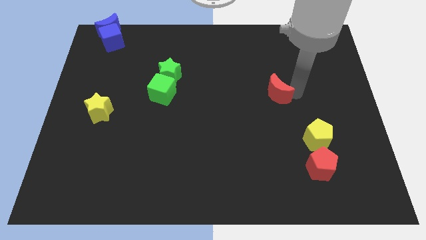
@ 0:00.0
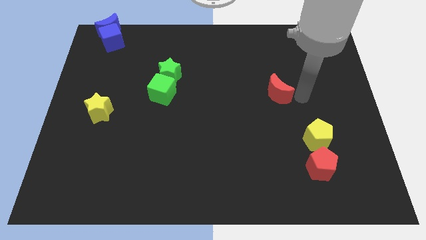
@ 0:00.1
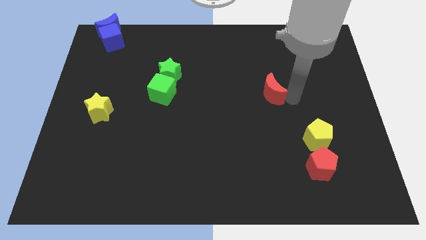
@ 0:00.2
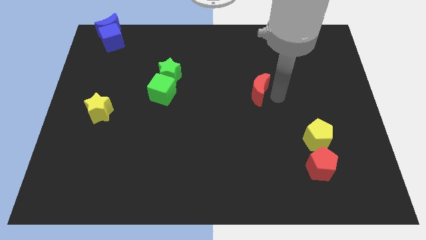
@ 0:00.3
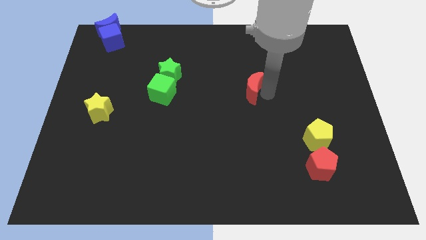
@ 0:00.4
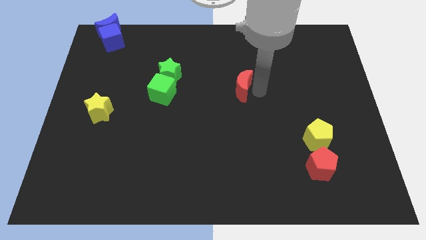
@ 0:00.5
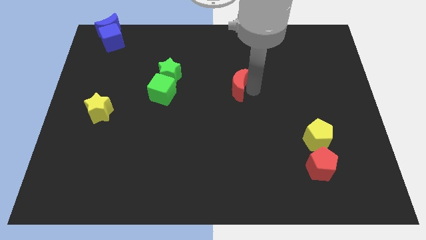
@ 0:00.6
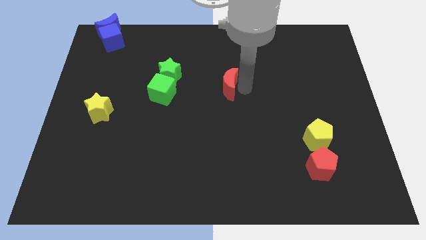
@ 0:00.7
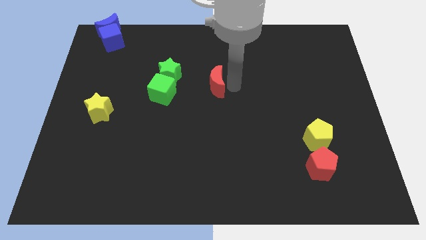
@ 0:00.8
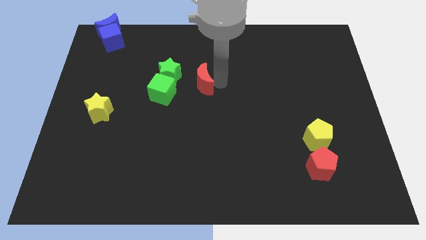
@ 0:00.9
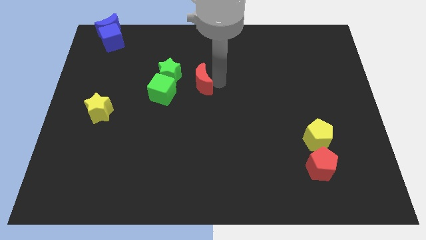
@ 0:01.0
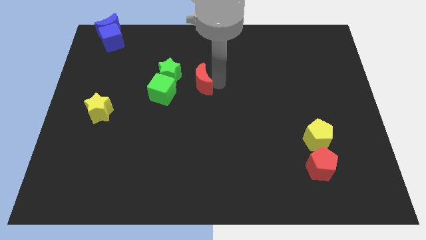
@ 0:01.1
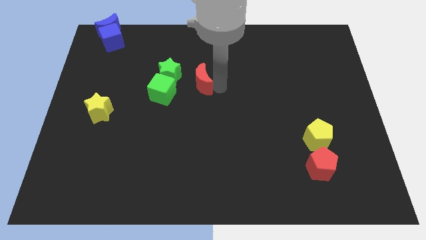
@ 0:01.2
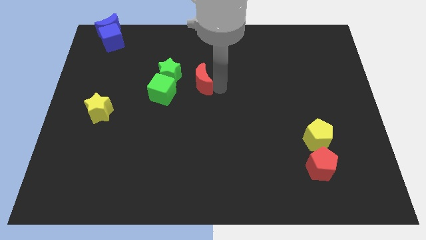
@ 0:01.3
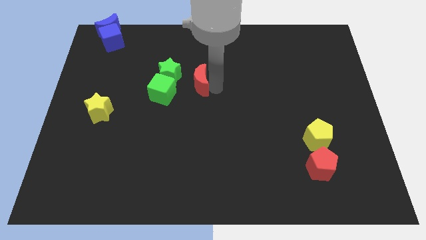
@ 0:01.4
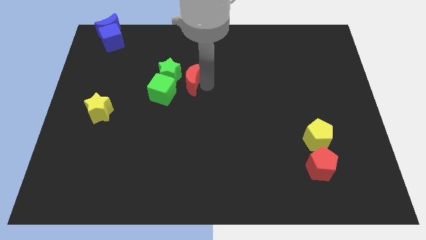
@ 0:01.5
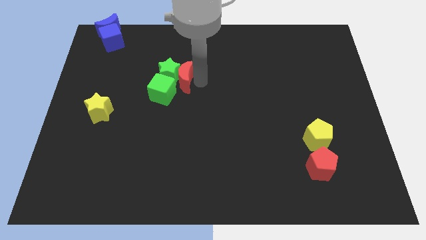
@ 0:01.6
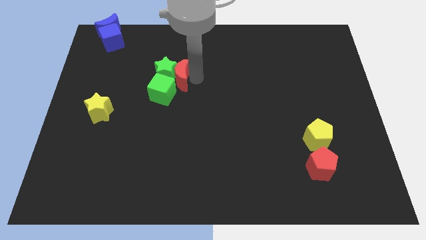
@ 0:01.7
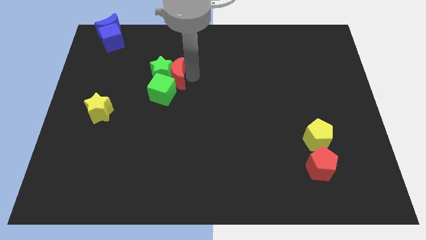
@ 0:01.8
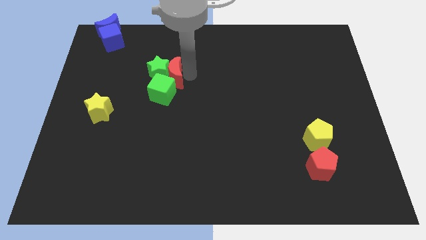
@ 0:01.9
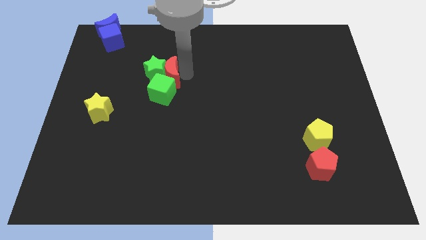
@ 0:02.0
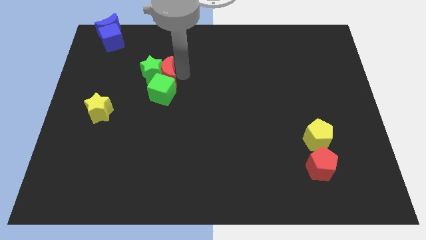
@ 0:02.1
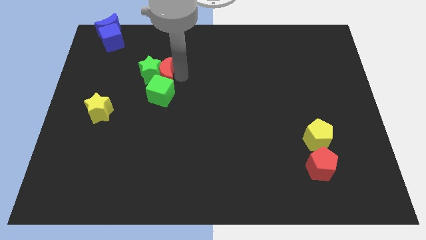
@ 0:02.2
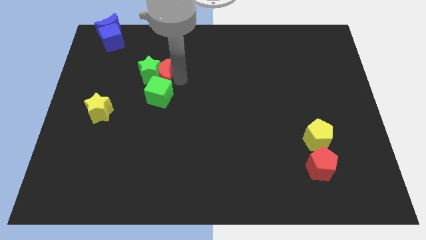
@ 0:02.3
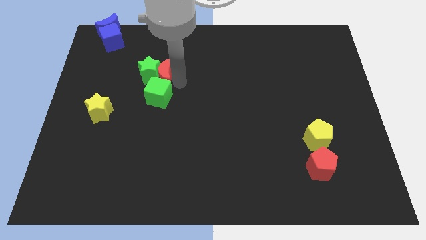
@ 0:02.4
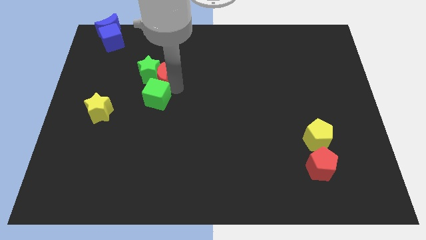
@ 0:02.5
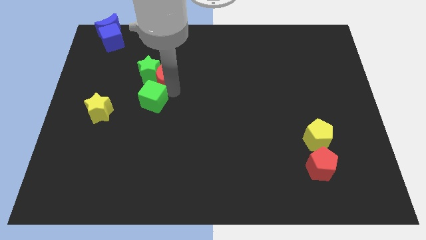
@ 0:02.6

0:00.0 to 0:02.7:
push red crescent above the green cube

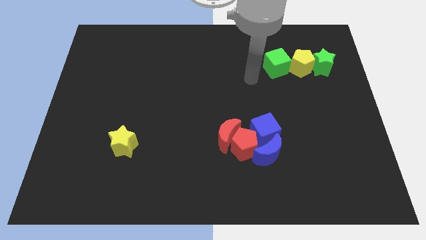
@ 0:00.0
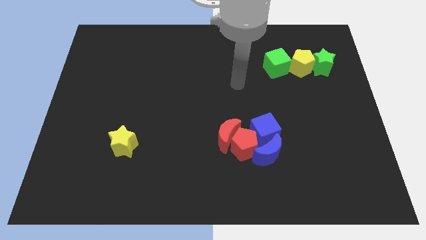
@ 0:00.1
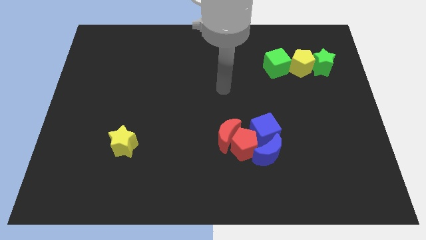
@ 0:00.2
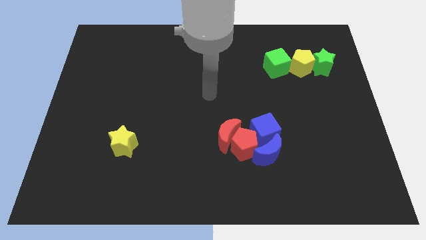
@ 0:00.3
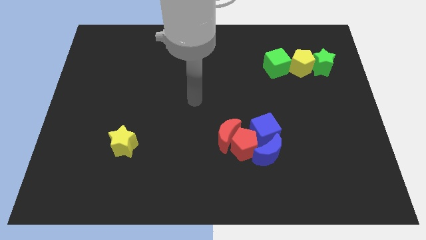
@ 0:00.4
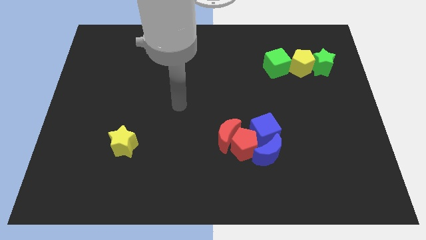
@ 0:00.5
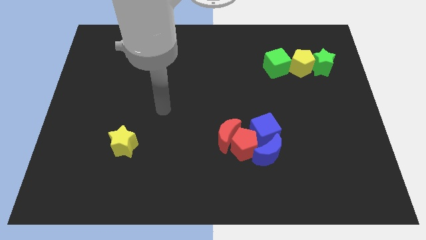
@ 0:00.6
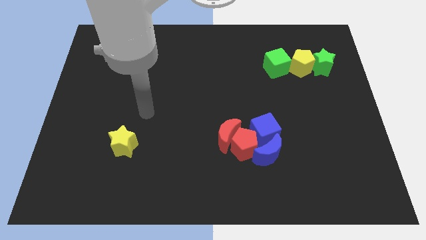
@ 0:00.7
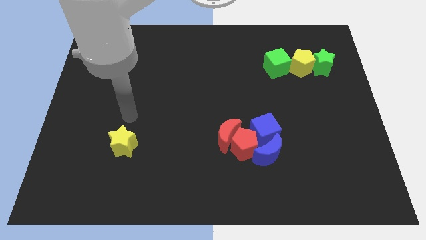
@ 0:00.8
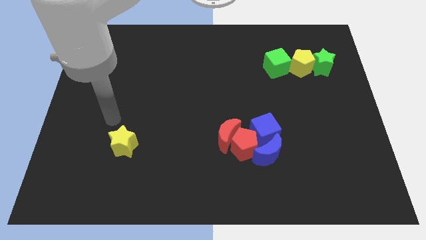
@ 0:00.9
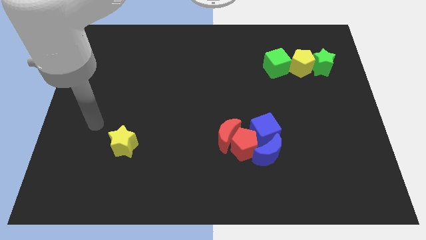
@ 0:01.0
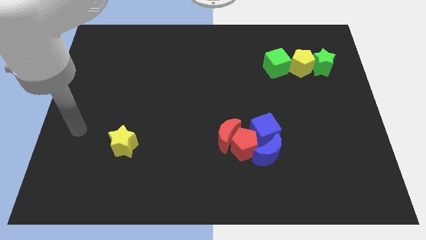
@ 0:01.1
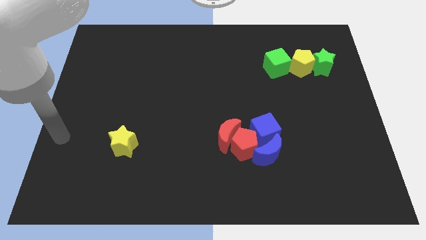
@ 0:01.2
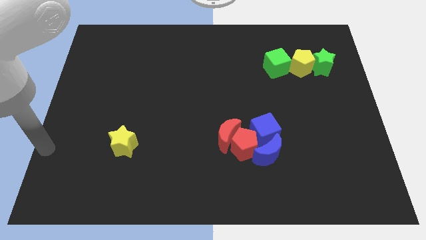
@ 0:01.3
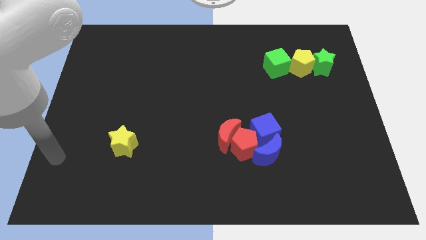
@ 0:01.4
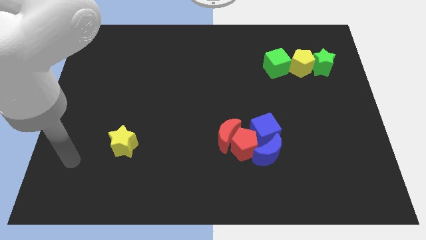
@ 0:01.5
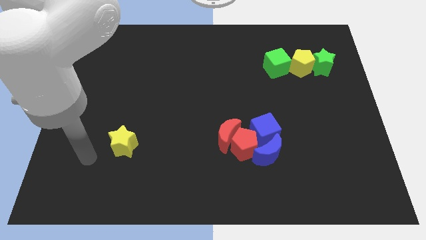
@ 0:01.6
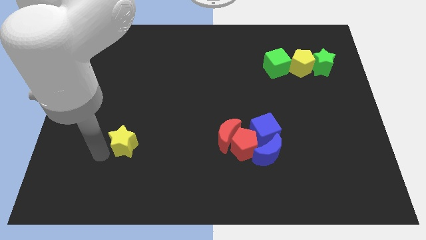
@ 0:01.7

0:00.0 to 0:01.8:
point your arm diagonal to yellow star

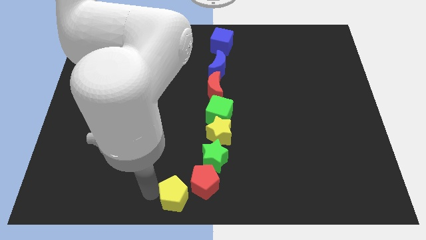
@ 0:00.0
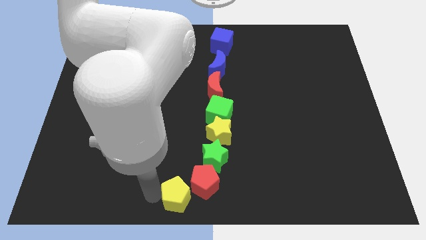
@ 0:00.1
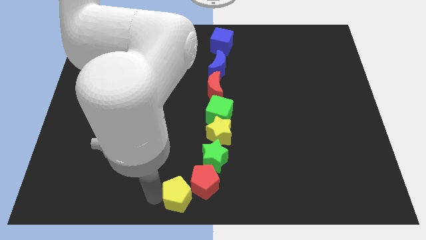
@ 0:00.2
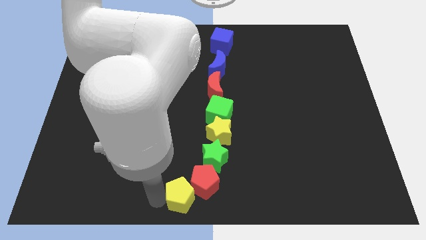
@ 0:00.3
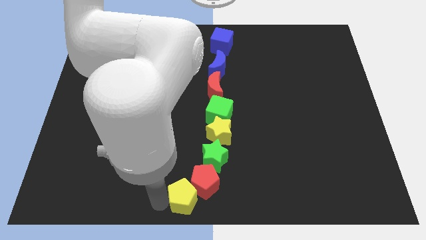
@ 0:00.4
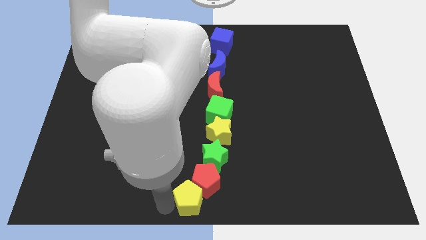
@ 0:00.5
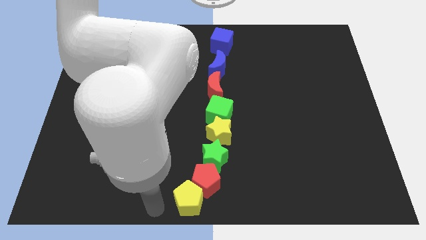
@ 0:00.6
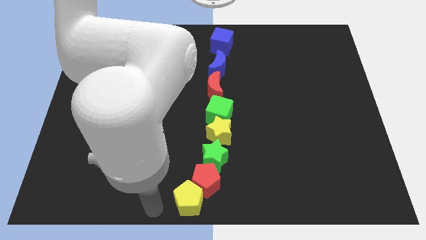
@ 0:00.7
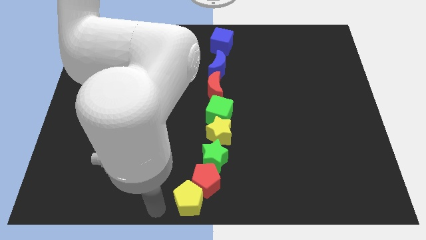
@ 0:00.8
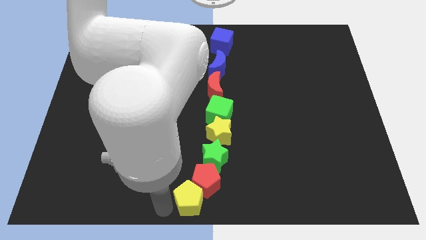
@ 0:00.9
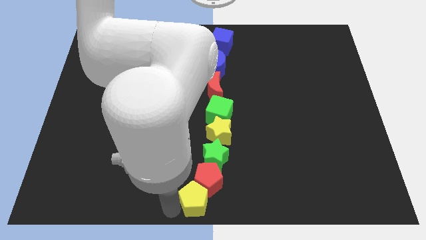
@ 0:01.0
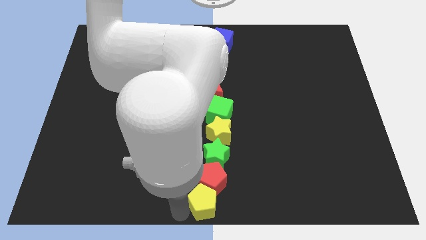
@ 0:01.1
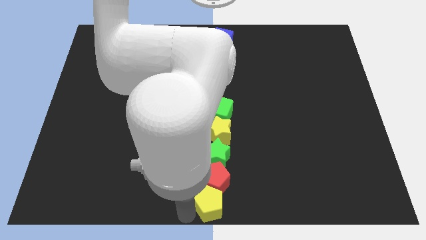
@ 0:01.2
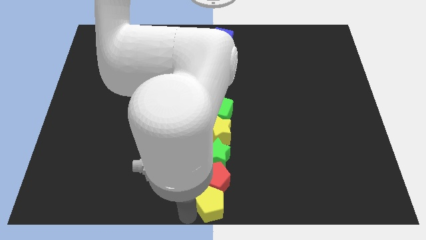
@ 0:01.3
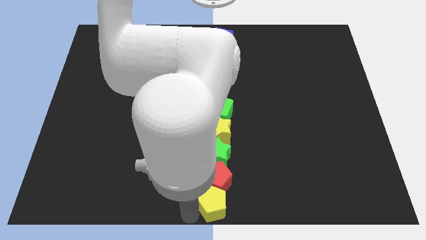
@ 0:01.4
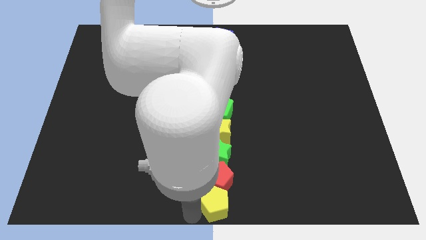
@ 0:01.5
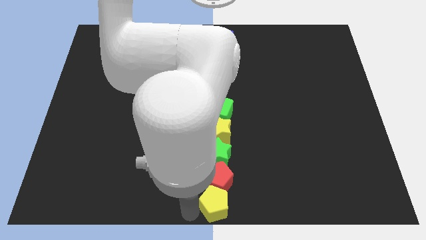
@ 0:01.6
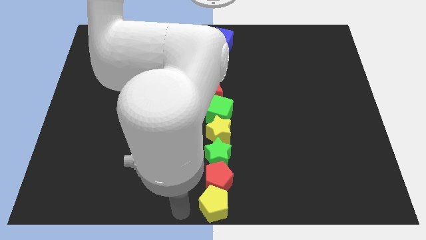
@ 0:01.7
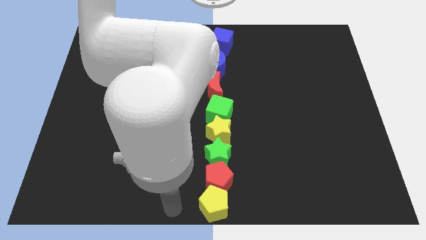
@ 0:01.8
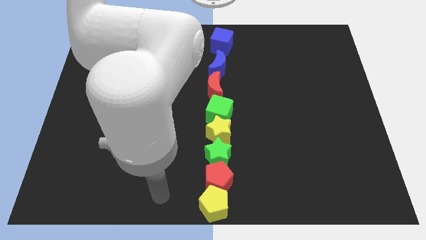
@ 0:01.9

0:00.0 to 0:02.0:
place yellow pentagon below the red pentagon

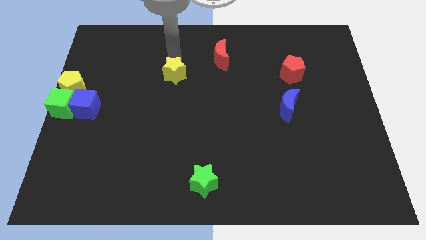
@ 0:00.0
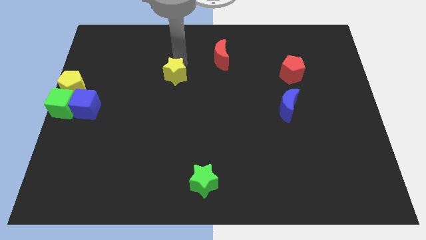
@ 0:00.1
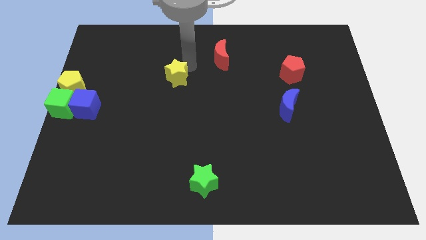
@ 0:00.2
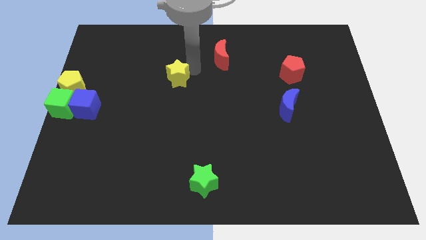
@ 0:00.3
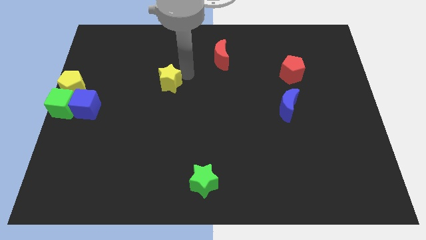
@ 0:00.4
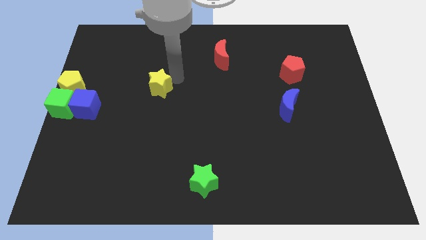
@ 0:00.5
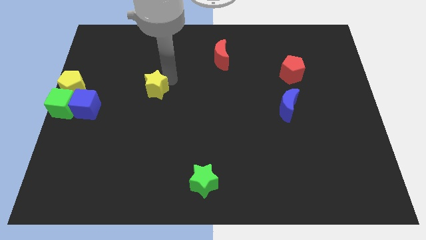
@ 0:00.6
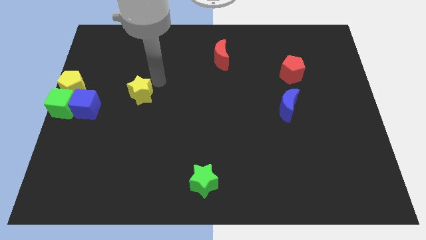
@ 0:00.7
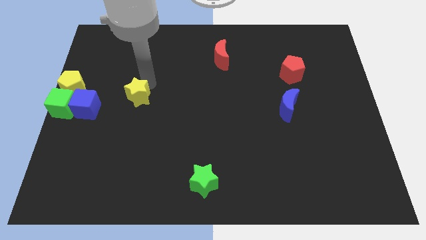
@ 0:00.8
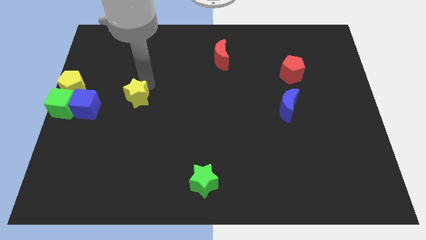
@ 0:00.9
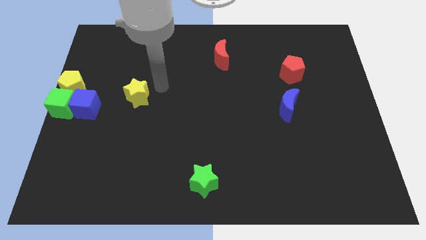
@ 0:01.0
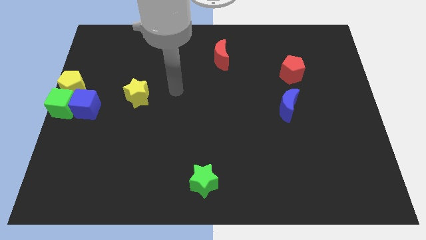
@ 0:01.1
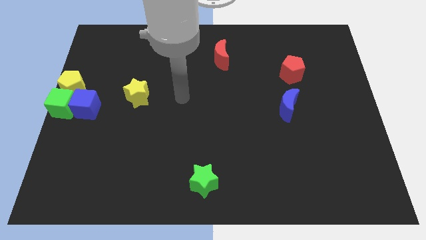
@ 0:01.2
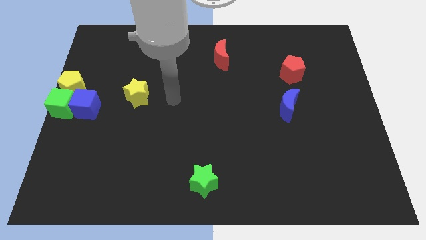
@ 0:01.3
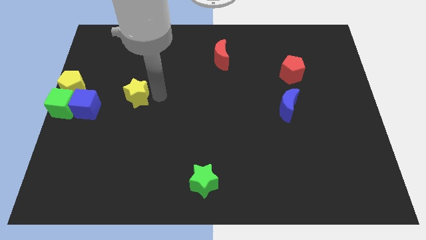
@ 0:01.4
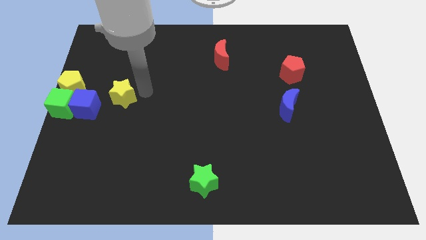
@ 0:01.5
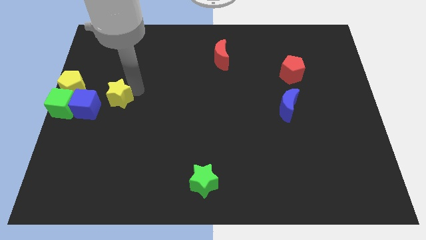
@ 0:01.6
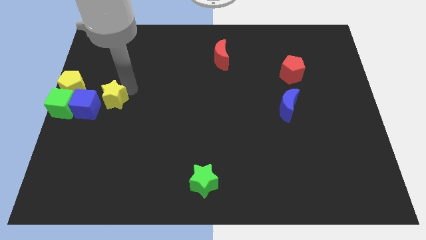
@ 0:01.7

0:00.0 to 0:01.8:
move the yellow star towards the blue cube

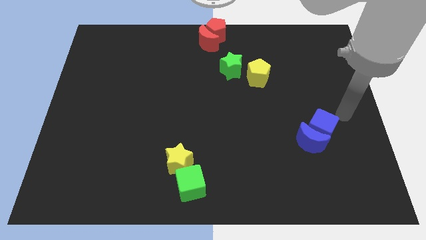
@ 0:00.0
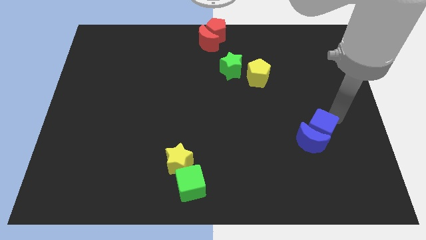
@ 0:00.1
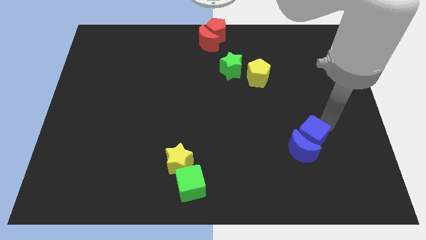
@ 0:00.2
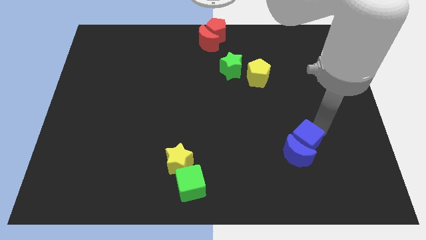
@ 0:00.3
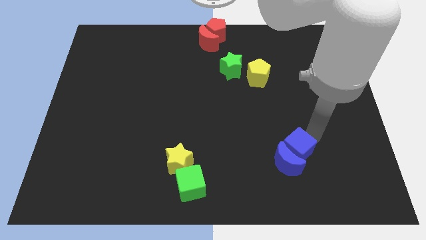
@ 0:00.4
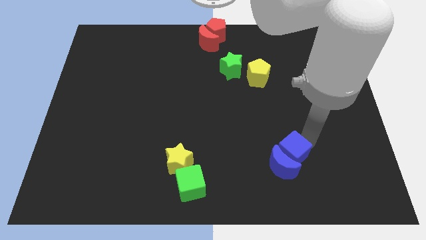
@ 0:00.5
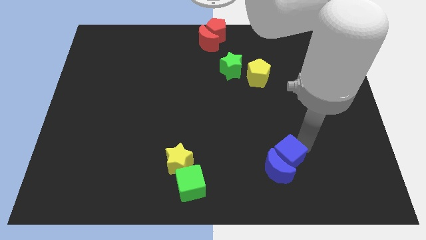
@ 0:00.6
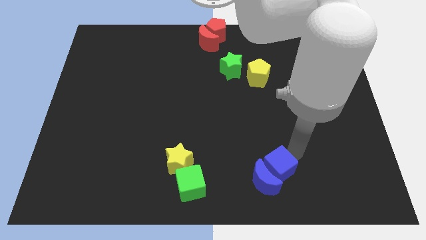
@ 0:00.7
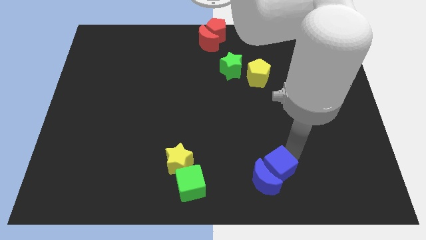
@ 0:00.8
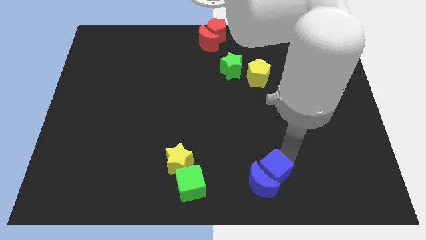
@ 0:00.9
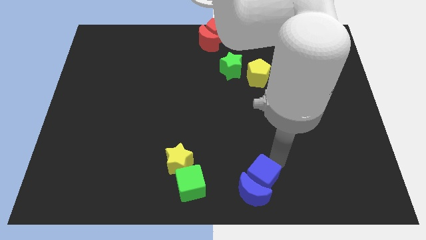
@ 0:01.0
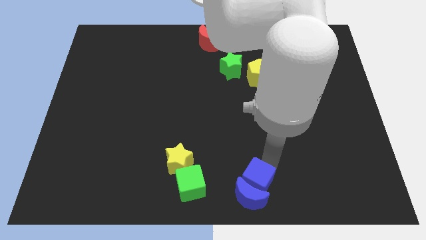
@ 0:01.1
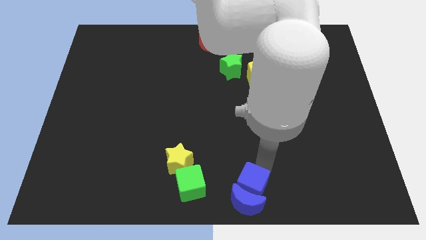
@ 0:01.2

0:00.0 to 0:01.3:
take the group of blue blocks to the right side of the green cube
